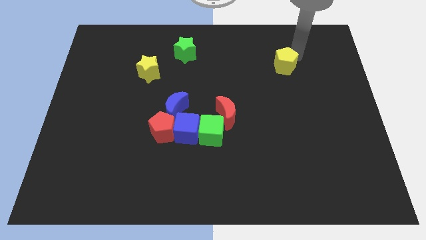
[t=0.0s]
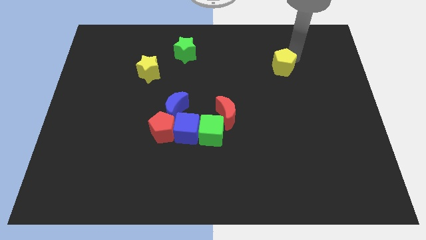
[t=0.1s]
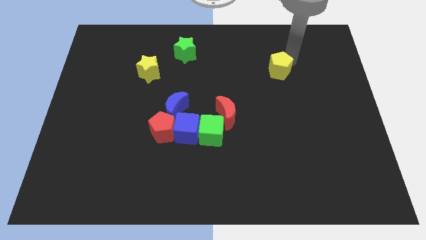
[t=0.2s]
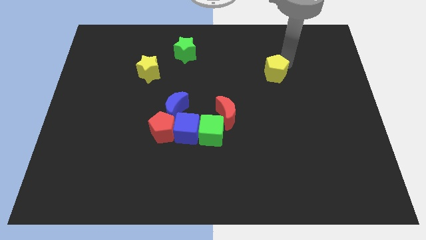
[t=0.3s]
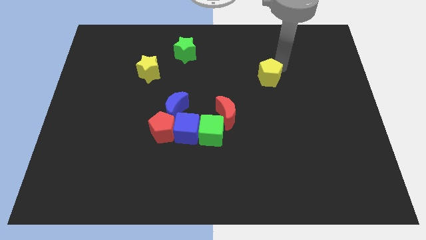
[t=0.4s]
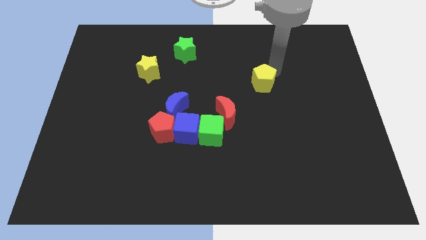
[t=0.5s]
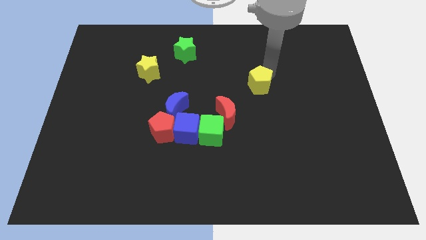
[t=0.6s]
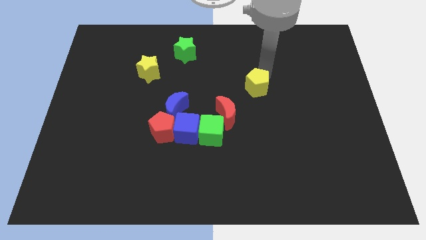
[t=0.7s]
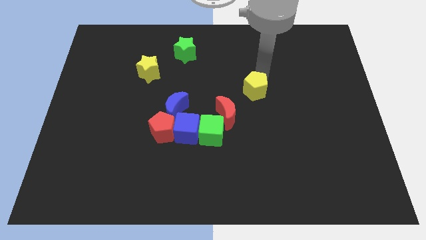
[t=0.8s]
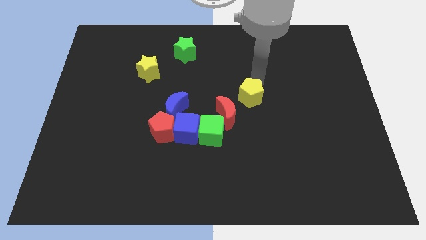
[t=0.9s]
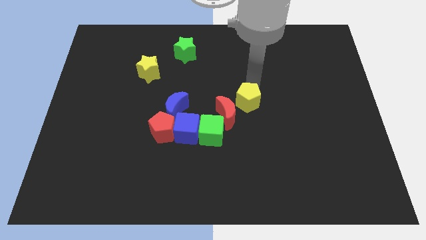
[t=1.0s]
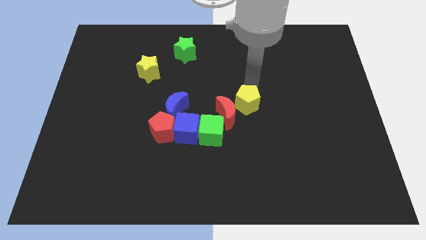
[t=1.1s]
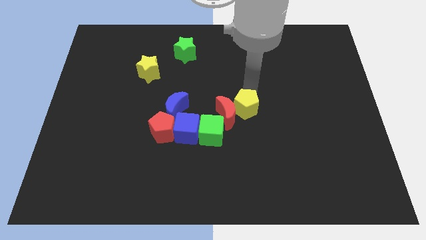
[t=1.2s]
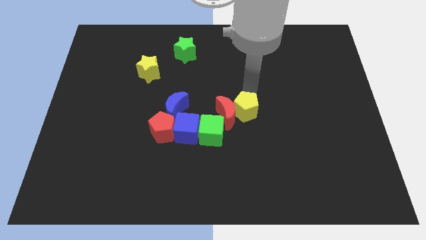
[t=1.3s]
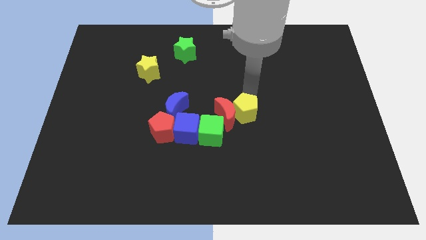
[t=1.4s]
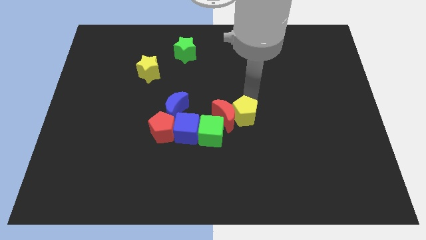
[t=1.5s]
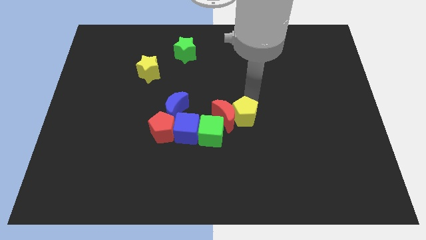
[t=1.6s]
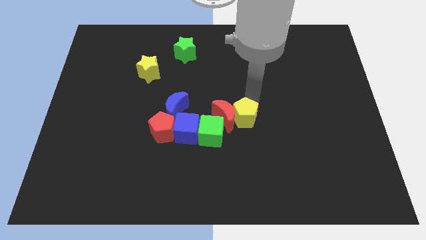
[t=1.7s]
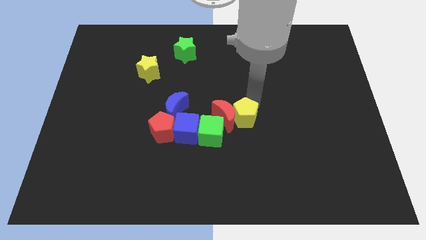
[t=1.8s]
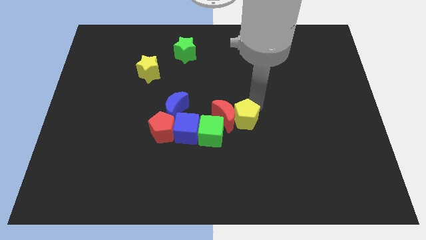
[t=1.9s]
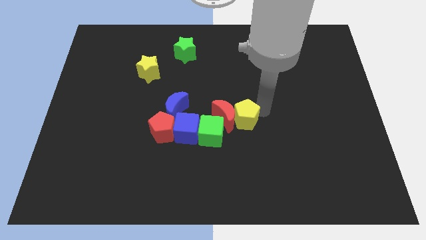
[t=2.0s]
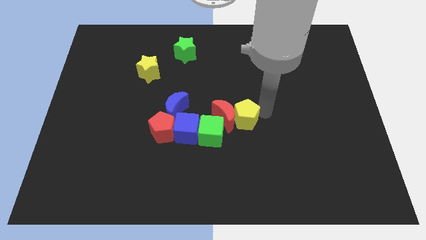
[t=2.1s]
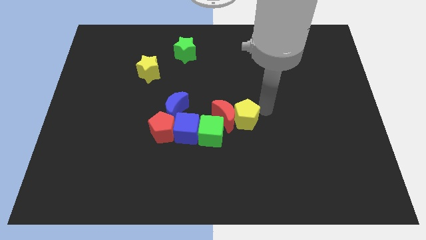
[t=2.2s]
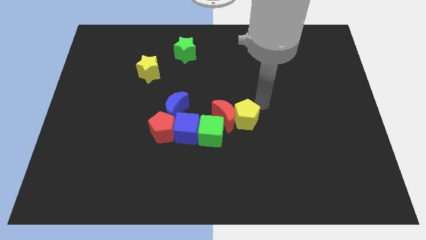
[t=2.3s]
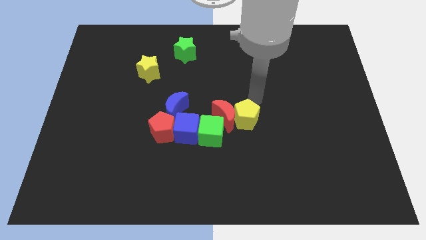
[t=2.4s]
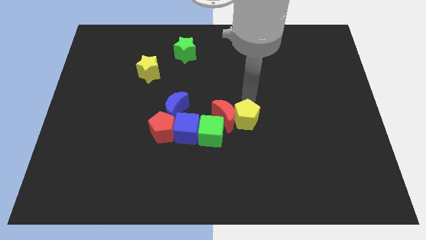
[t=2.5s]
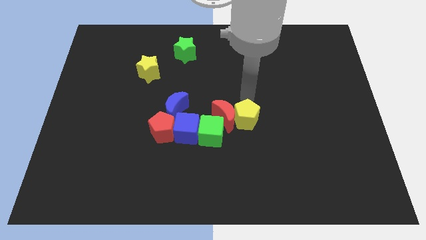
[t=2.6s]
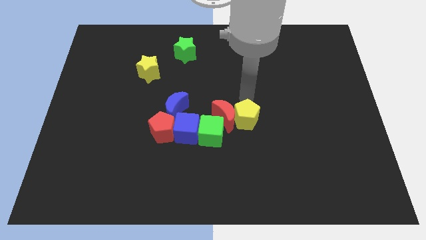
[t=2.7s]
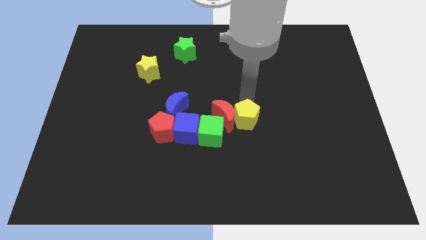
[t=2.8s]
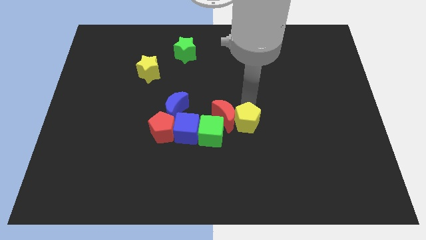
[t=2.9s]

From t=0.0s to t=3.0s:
place the yellow pentagon right to the red moon

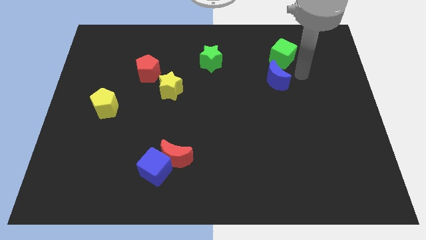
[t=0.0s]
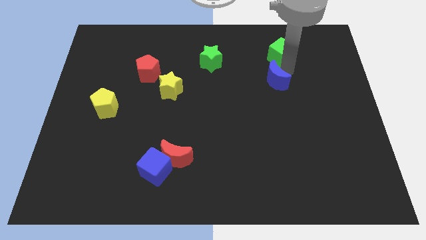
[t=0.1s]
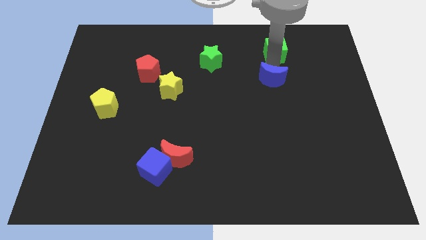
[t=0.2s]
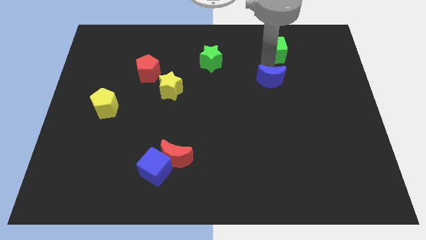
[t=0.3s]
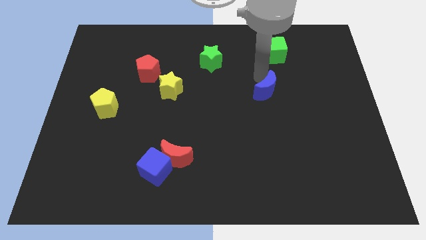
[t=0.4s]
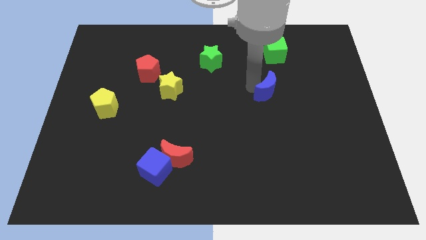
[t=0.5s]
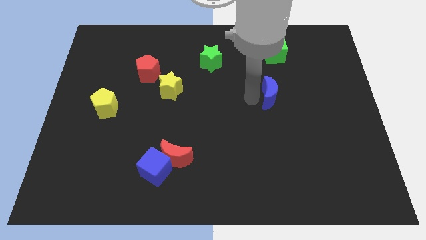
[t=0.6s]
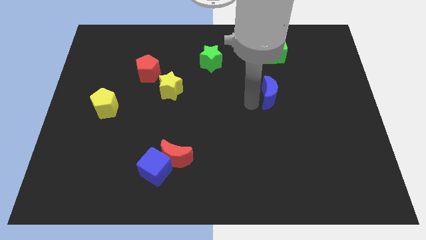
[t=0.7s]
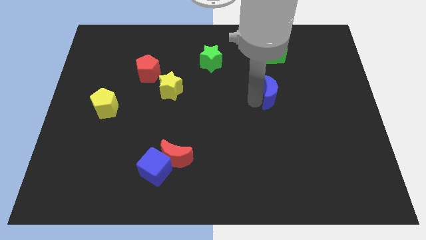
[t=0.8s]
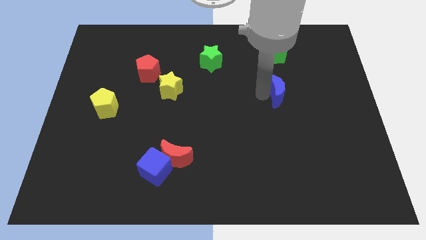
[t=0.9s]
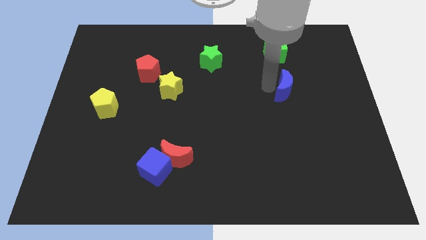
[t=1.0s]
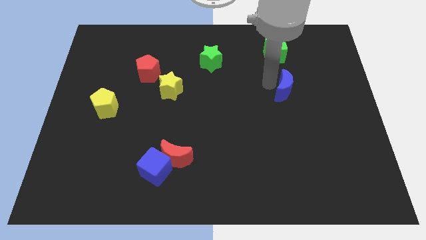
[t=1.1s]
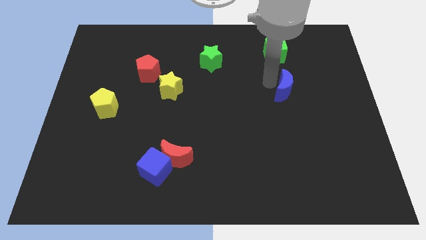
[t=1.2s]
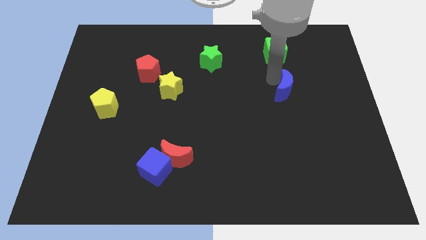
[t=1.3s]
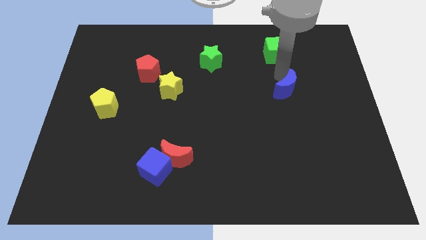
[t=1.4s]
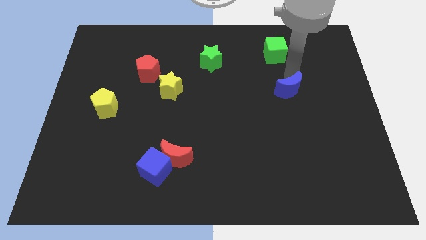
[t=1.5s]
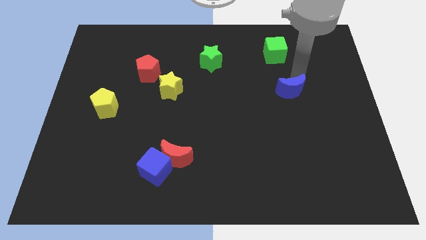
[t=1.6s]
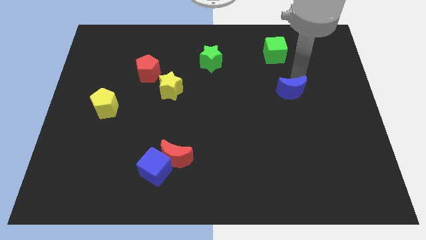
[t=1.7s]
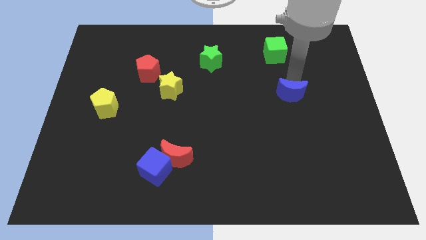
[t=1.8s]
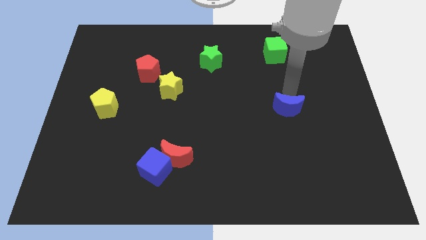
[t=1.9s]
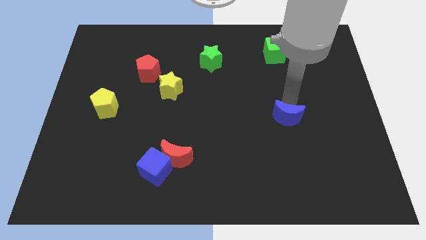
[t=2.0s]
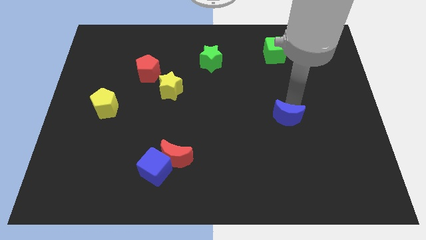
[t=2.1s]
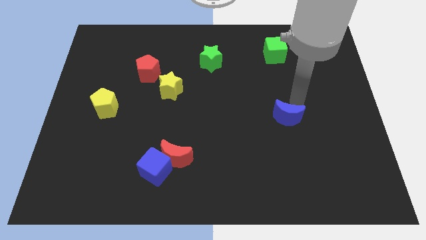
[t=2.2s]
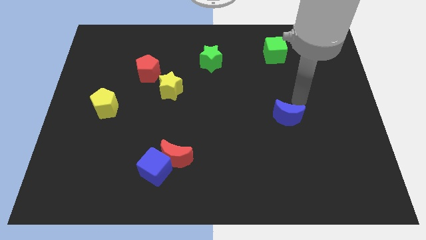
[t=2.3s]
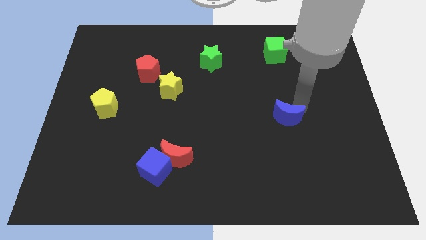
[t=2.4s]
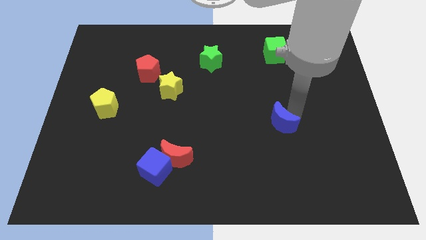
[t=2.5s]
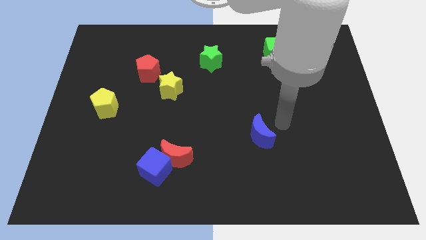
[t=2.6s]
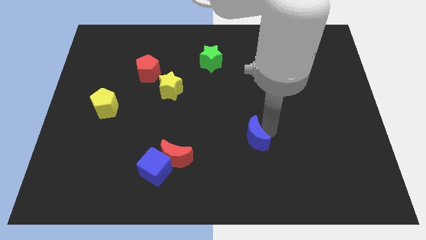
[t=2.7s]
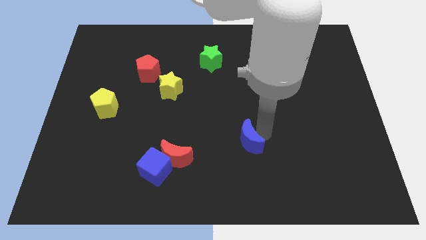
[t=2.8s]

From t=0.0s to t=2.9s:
push the blue crescent towards the top right of the red moon

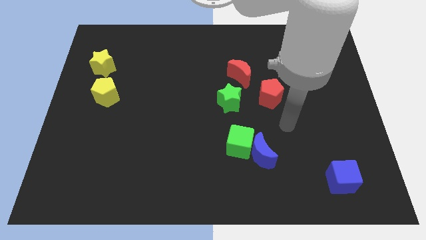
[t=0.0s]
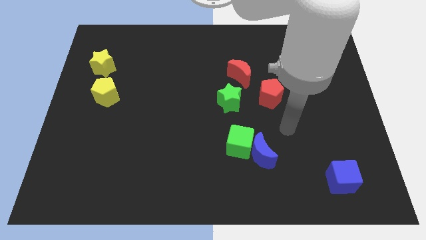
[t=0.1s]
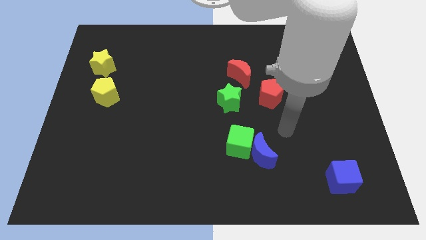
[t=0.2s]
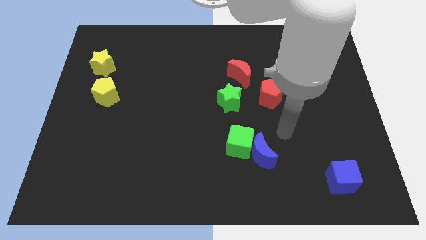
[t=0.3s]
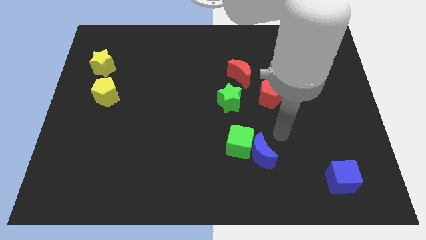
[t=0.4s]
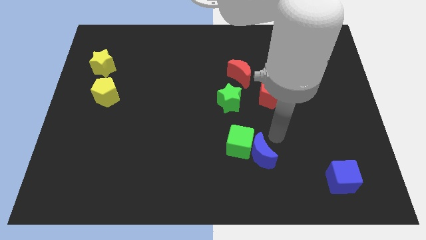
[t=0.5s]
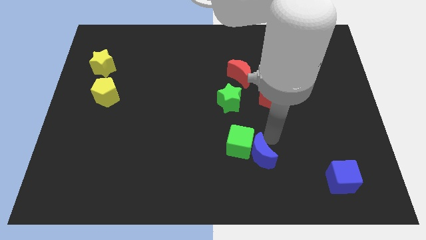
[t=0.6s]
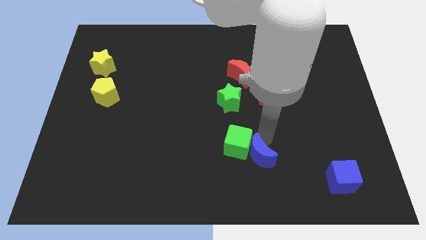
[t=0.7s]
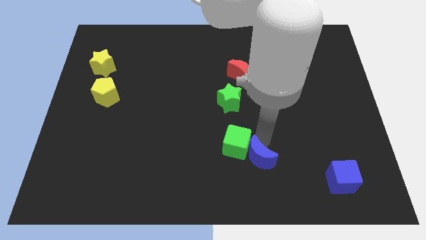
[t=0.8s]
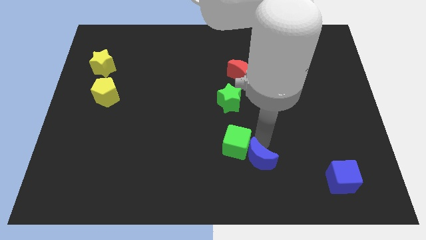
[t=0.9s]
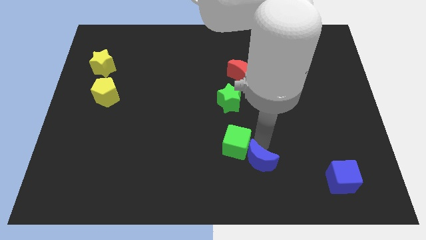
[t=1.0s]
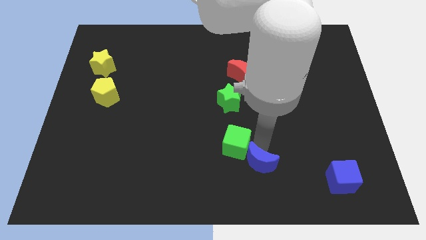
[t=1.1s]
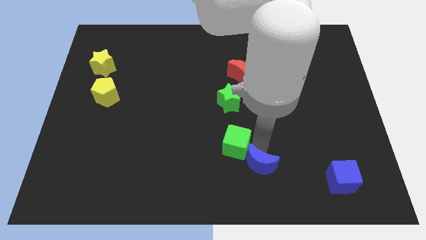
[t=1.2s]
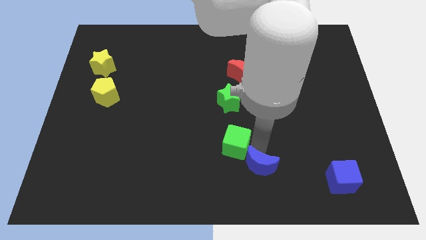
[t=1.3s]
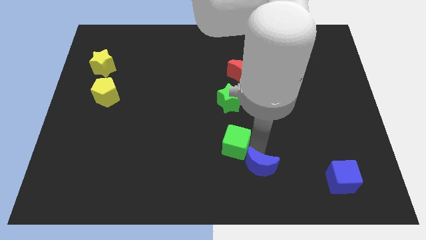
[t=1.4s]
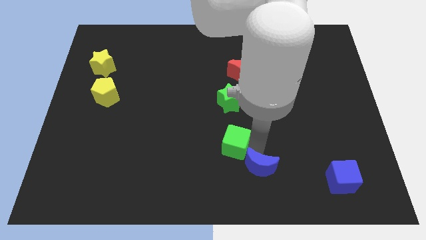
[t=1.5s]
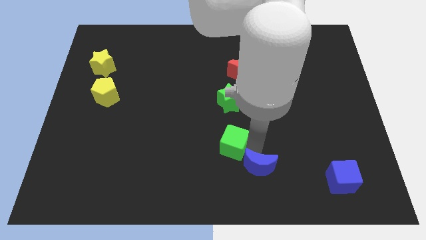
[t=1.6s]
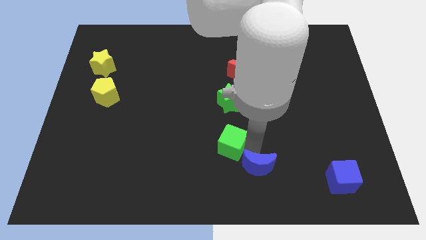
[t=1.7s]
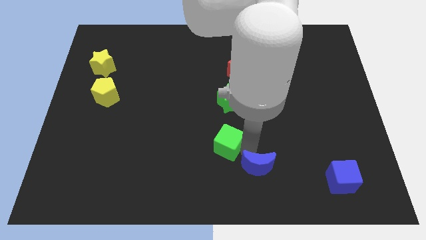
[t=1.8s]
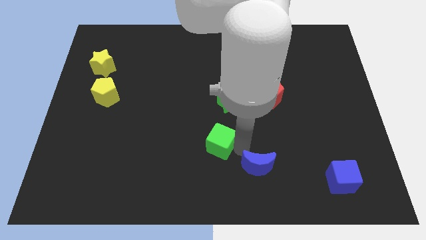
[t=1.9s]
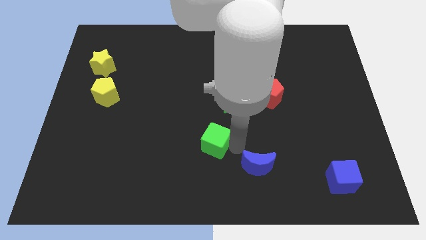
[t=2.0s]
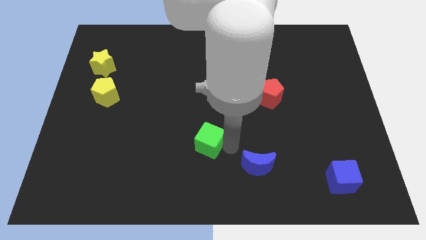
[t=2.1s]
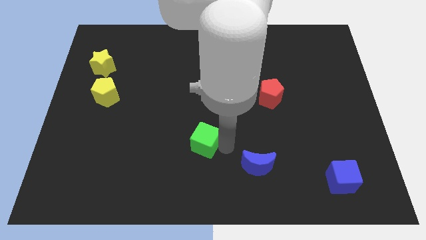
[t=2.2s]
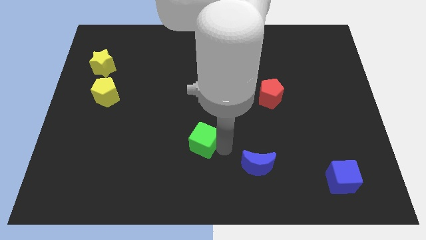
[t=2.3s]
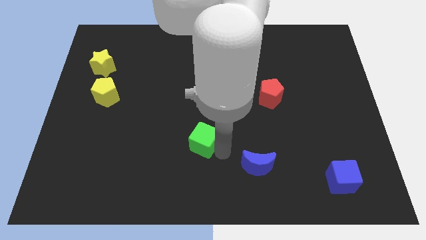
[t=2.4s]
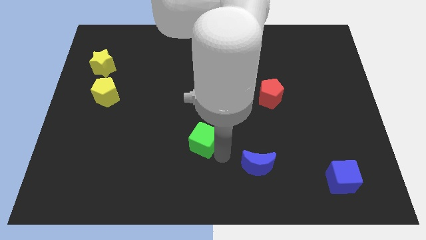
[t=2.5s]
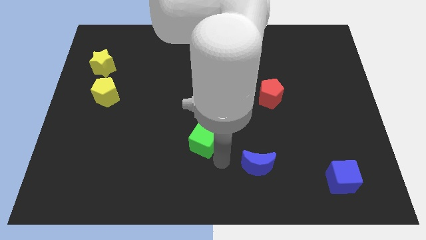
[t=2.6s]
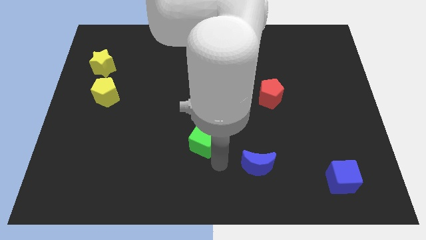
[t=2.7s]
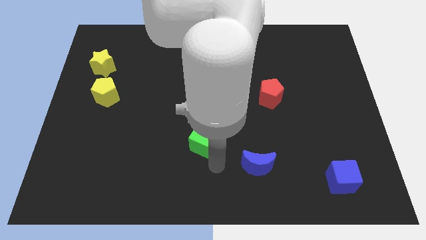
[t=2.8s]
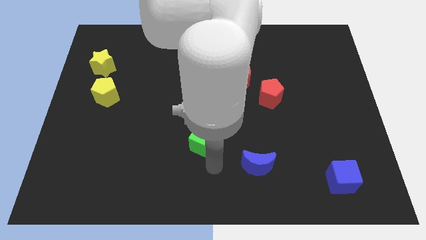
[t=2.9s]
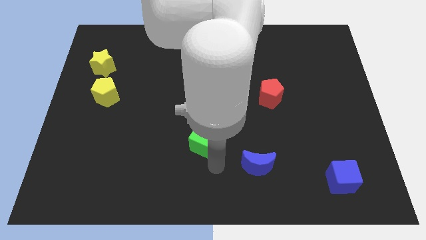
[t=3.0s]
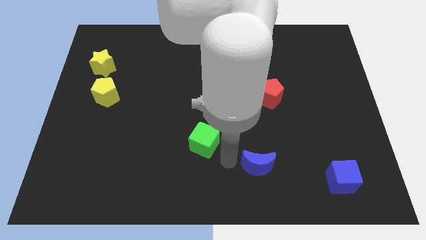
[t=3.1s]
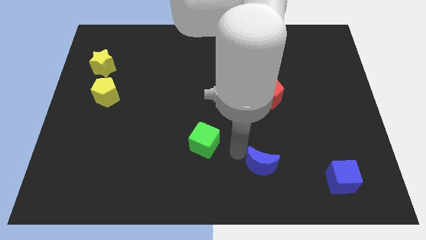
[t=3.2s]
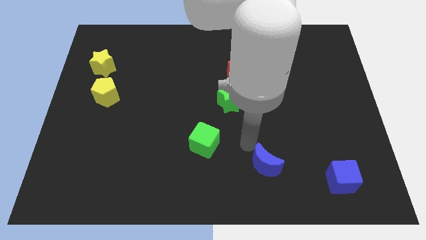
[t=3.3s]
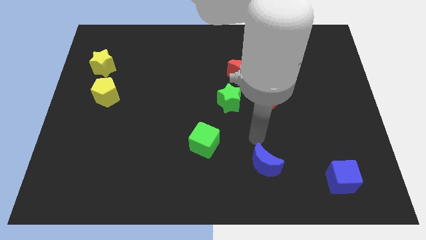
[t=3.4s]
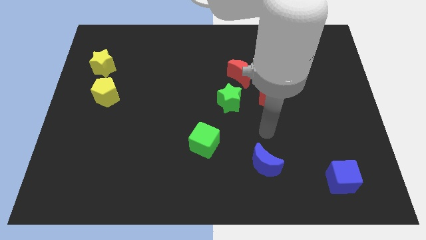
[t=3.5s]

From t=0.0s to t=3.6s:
separate the blue crescent and the green cube
